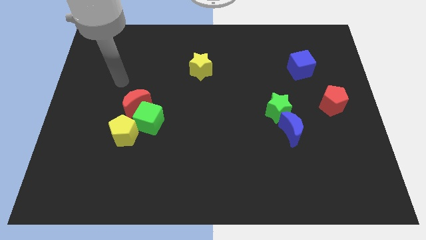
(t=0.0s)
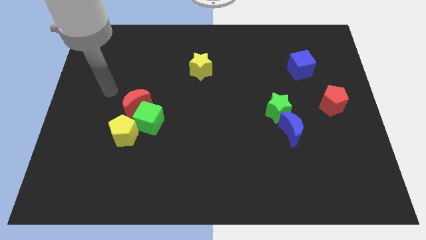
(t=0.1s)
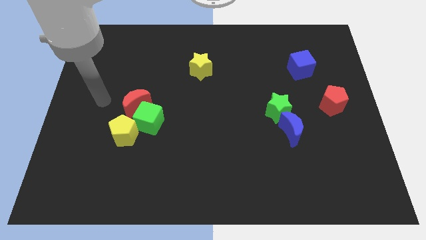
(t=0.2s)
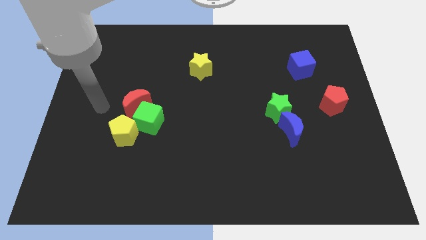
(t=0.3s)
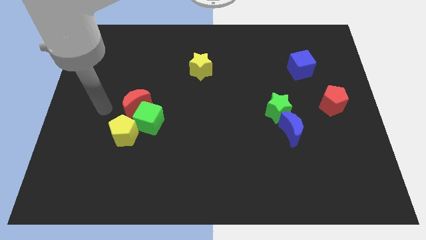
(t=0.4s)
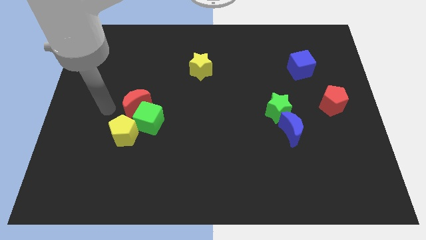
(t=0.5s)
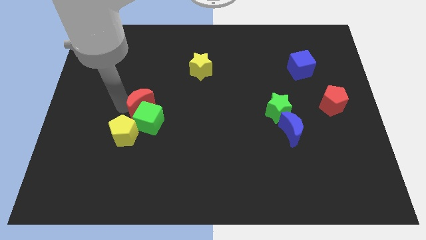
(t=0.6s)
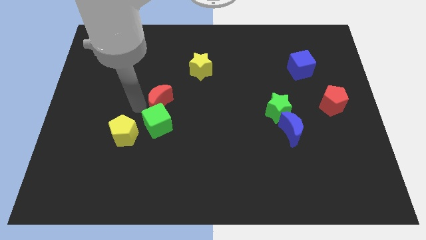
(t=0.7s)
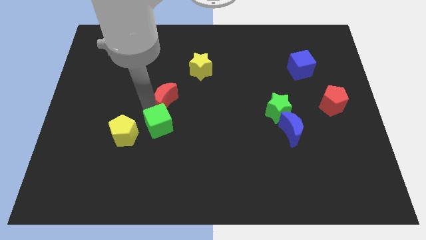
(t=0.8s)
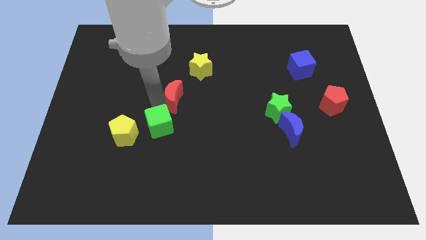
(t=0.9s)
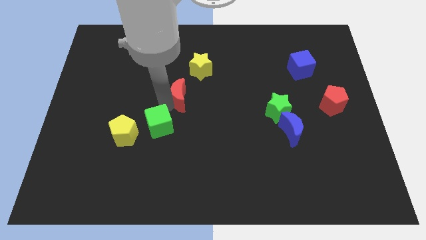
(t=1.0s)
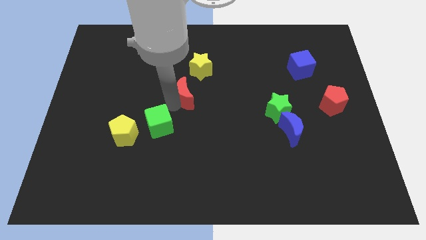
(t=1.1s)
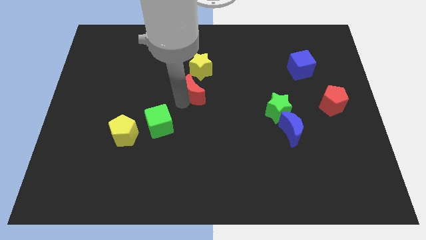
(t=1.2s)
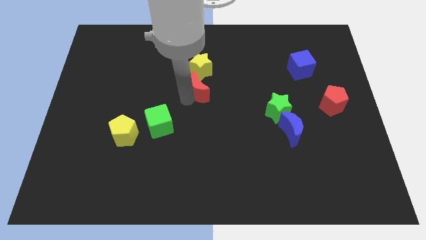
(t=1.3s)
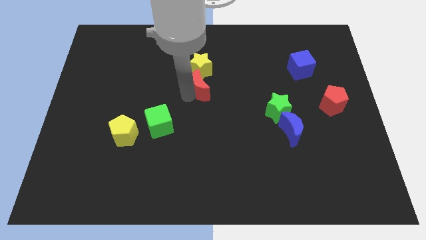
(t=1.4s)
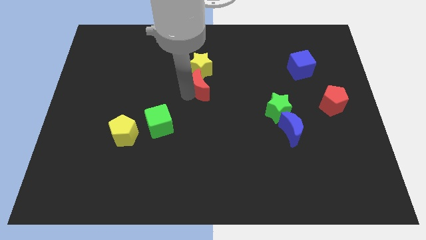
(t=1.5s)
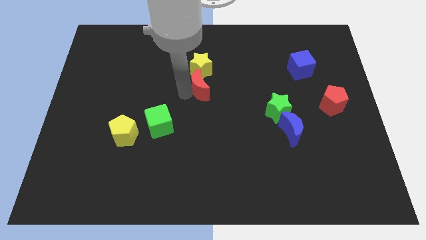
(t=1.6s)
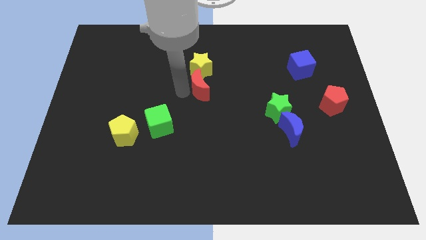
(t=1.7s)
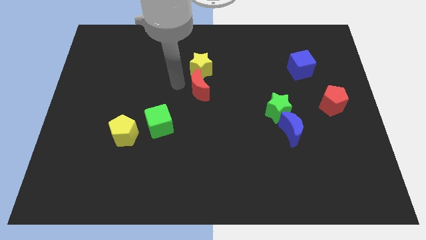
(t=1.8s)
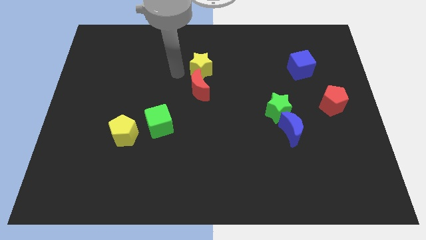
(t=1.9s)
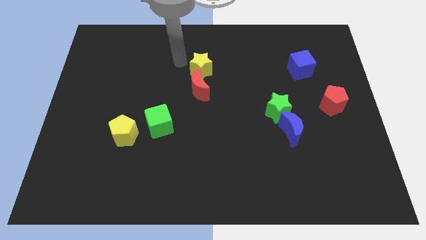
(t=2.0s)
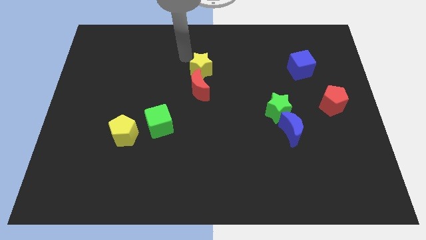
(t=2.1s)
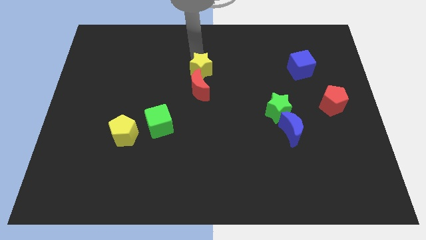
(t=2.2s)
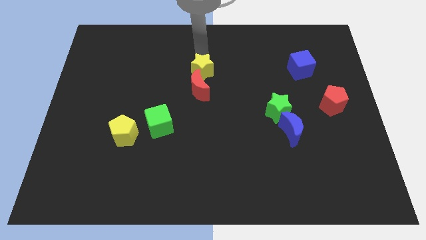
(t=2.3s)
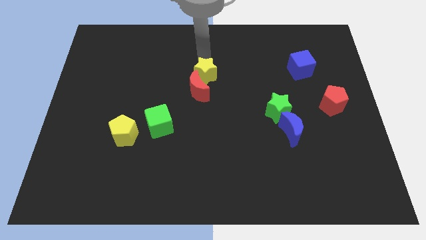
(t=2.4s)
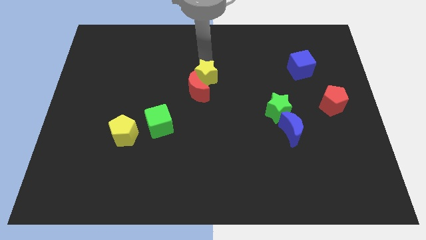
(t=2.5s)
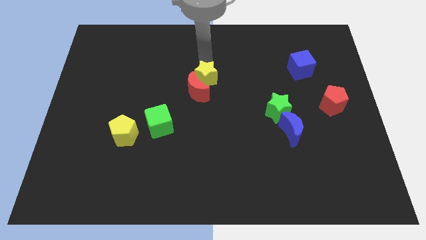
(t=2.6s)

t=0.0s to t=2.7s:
place red crescent in between yellow star and green cube

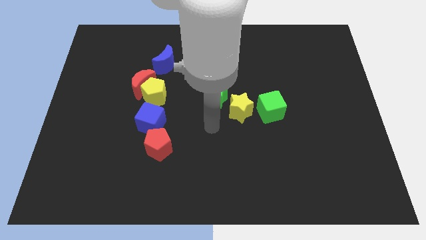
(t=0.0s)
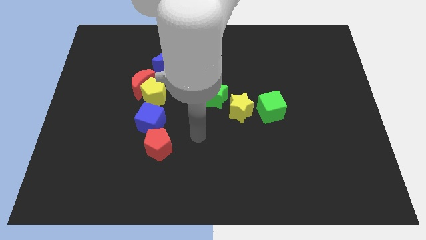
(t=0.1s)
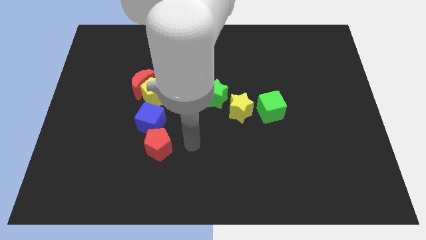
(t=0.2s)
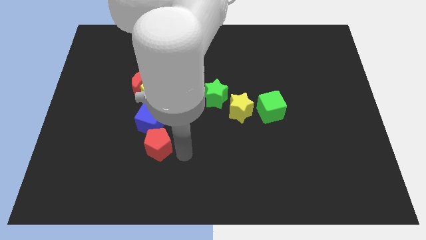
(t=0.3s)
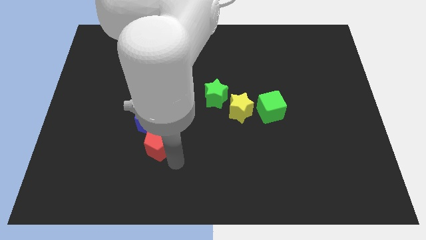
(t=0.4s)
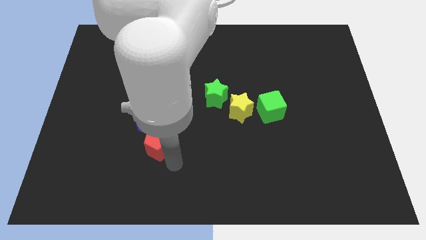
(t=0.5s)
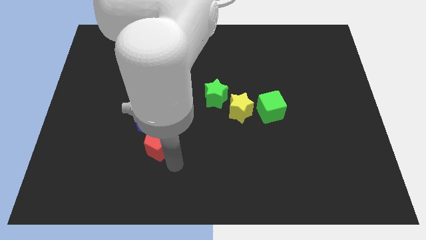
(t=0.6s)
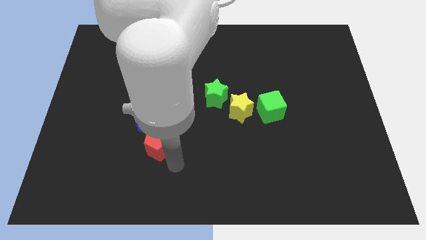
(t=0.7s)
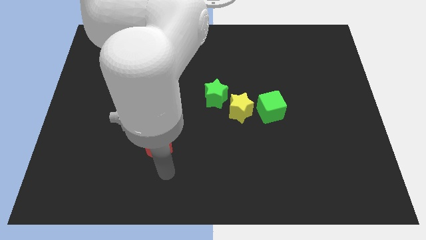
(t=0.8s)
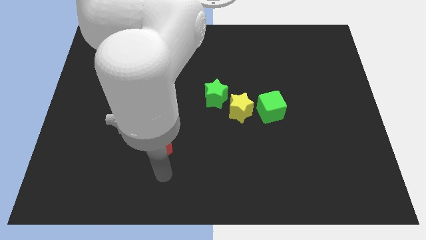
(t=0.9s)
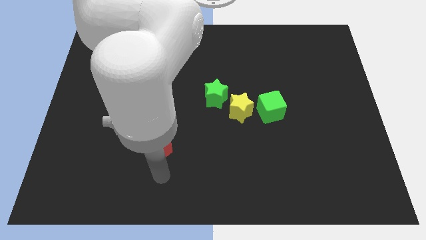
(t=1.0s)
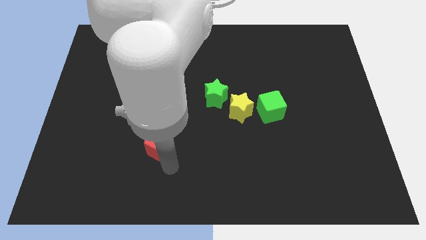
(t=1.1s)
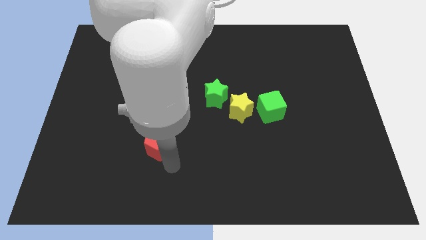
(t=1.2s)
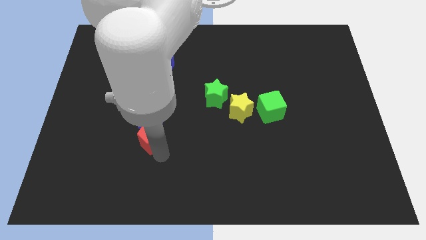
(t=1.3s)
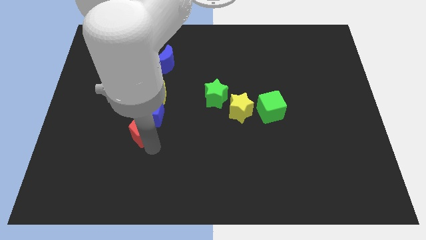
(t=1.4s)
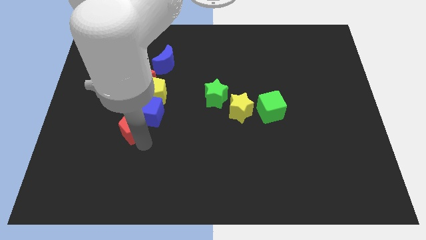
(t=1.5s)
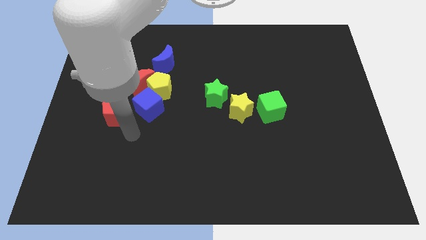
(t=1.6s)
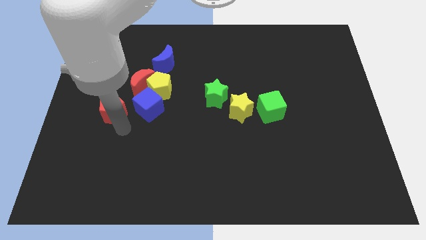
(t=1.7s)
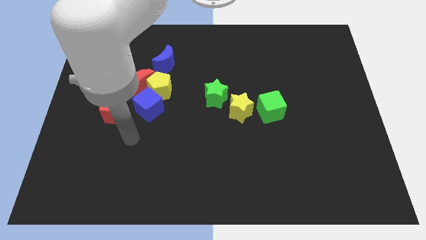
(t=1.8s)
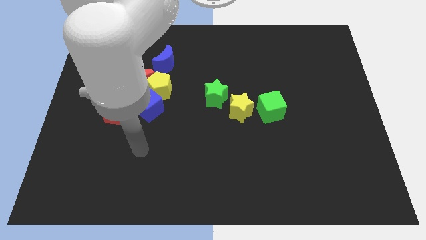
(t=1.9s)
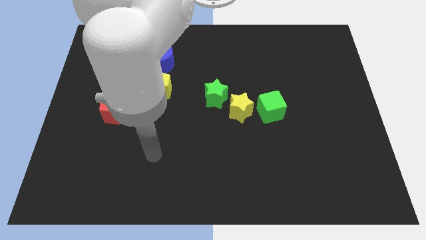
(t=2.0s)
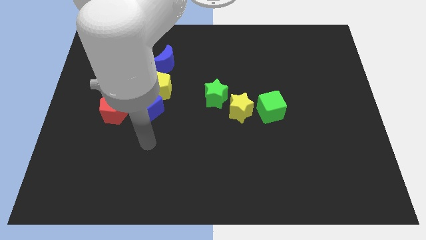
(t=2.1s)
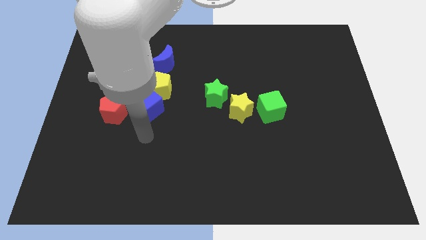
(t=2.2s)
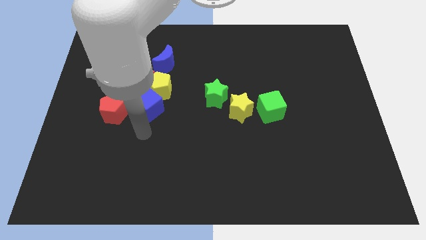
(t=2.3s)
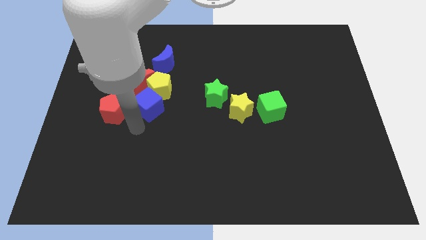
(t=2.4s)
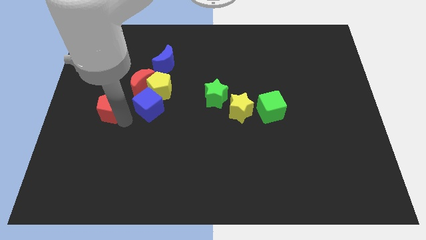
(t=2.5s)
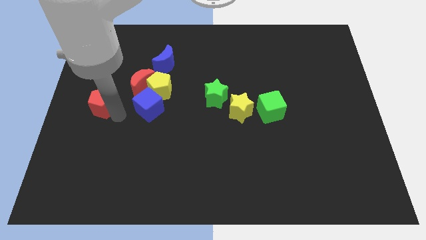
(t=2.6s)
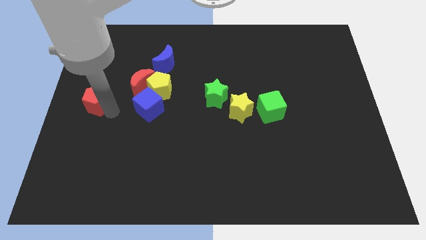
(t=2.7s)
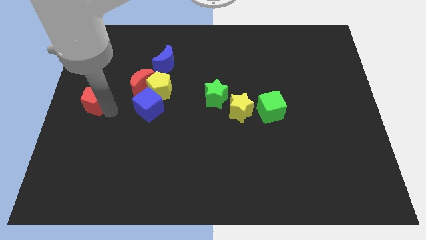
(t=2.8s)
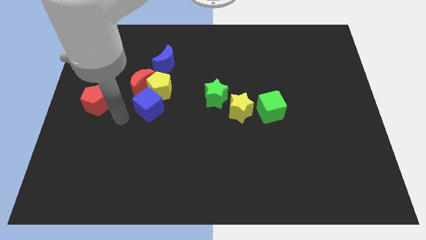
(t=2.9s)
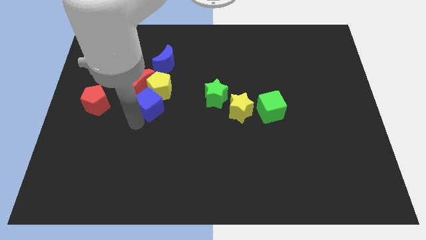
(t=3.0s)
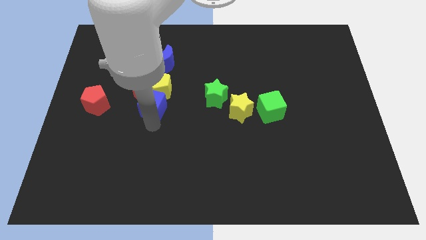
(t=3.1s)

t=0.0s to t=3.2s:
push the red pentagon towards the center left side of the board

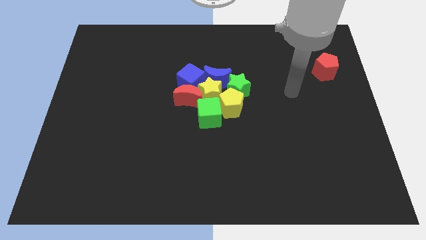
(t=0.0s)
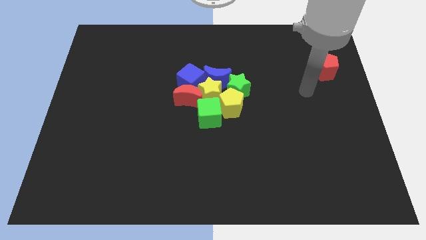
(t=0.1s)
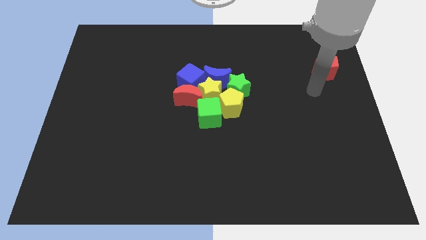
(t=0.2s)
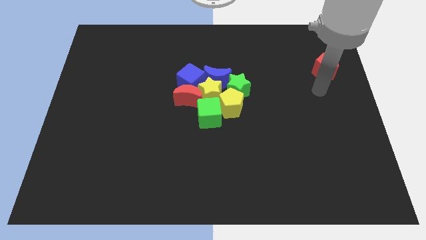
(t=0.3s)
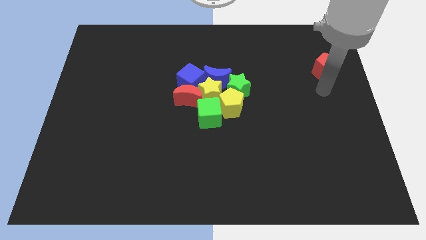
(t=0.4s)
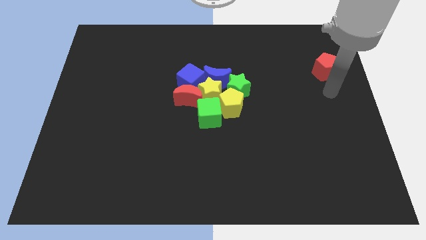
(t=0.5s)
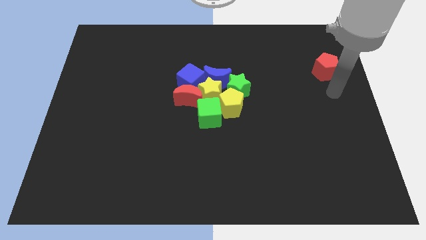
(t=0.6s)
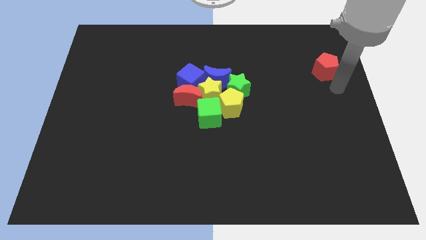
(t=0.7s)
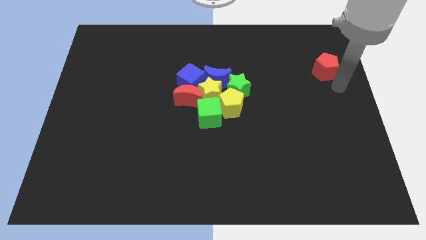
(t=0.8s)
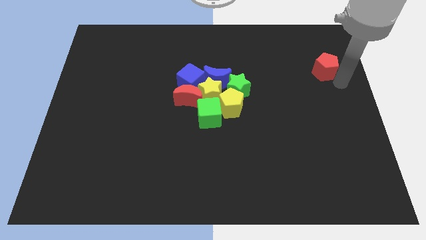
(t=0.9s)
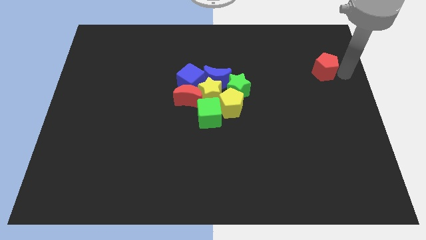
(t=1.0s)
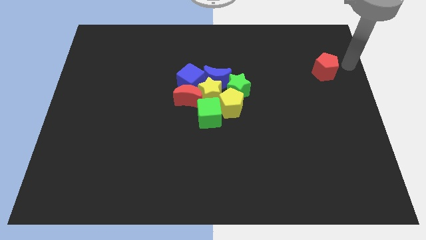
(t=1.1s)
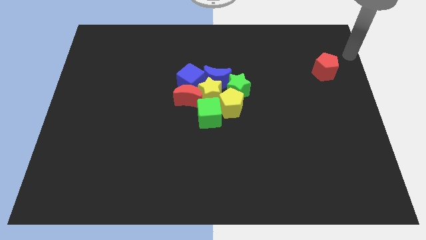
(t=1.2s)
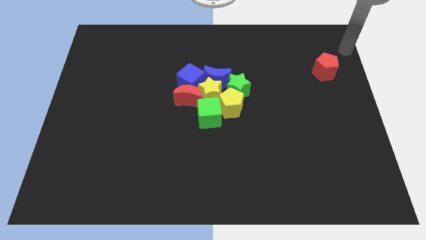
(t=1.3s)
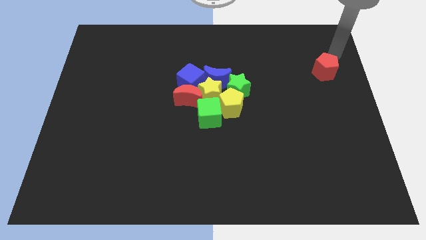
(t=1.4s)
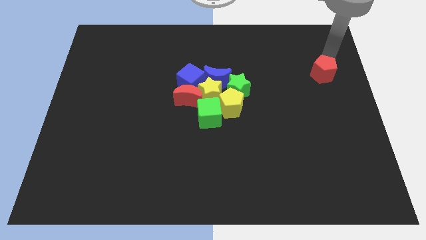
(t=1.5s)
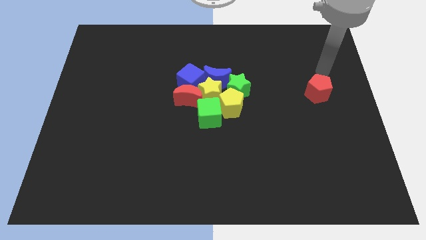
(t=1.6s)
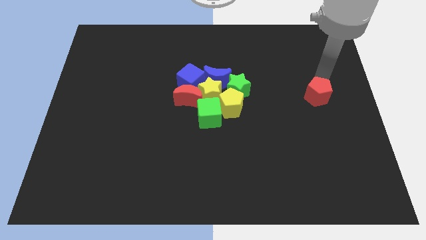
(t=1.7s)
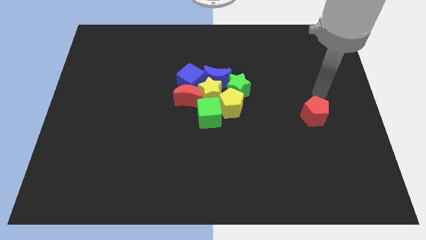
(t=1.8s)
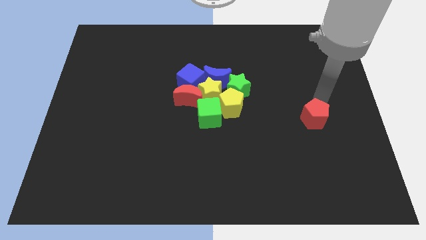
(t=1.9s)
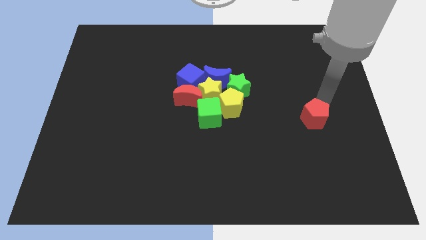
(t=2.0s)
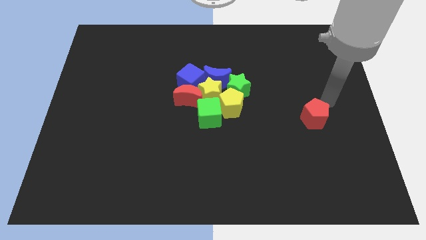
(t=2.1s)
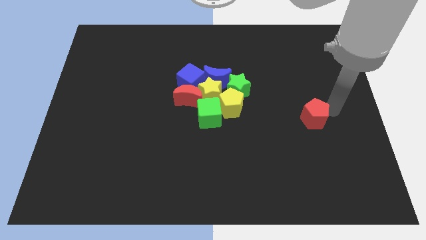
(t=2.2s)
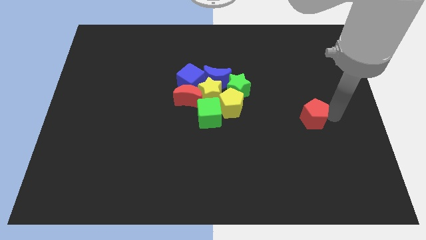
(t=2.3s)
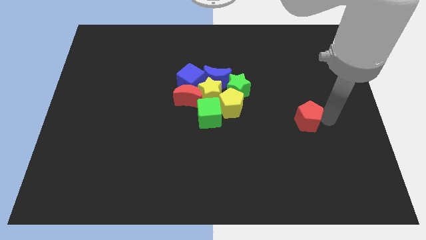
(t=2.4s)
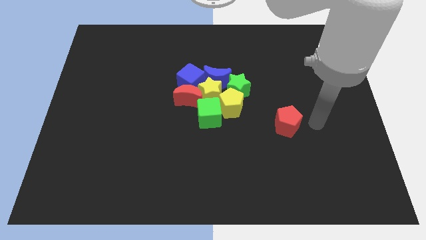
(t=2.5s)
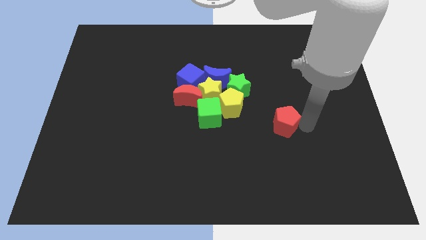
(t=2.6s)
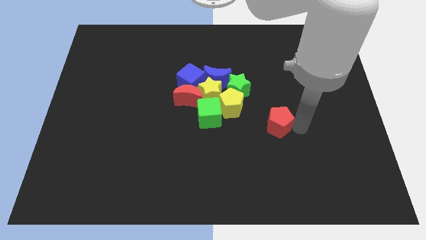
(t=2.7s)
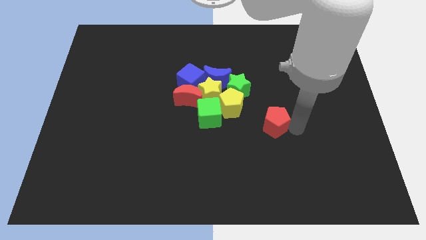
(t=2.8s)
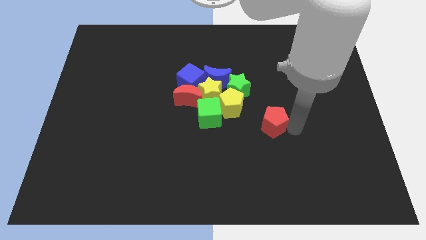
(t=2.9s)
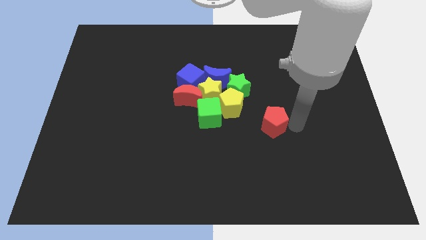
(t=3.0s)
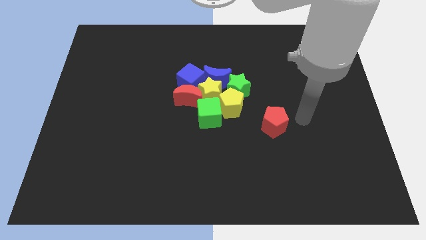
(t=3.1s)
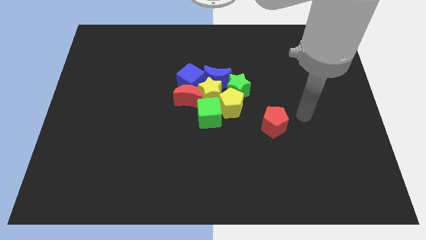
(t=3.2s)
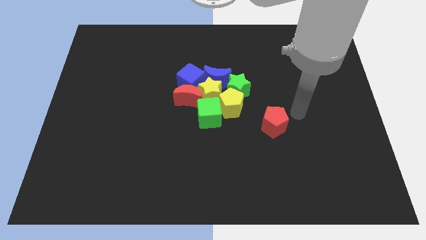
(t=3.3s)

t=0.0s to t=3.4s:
put the red pentagon diagonally on the bottom right side of the yellow pentagon
